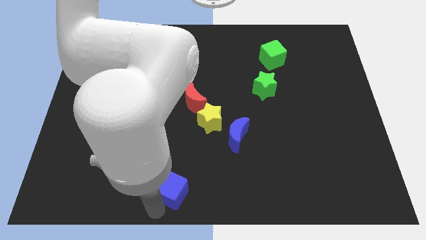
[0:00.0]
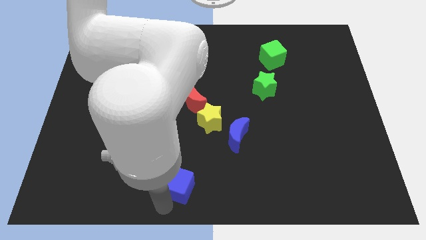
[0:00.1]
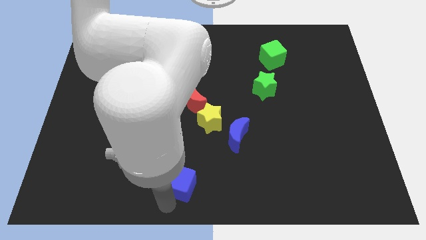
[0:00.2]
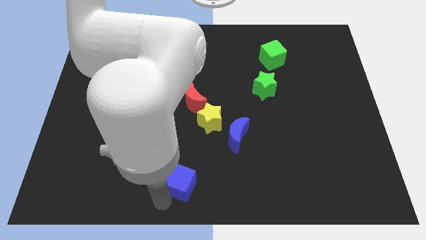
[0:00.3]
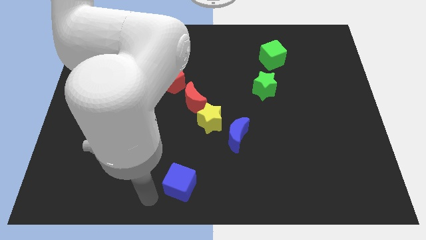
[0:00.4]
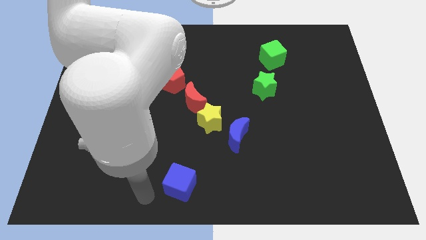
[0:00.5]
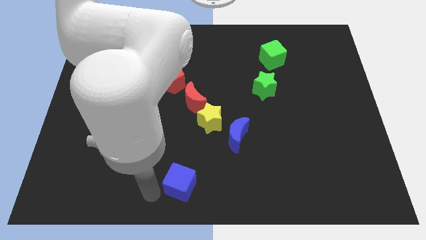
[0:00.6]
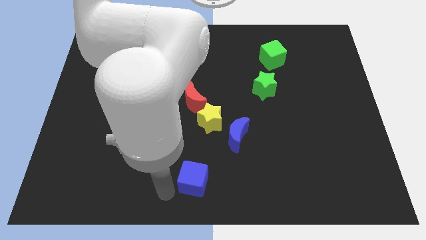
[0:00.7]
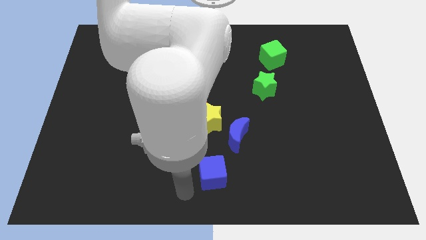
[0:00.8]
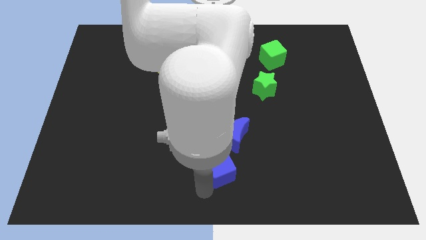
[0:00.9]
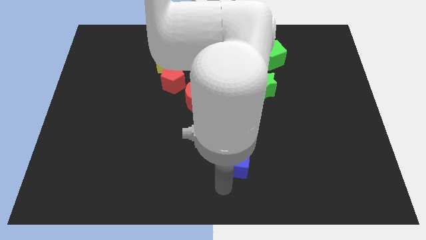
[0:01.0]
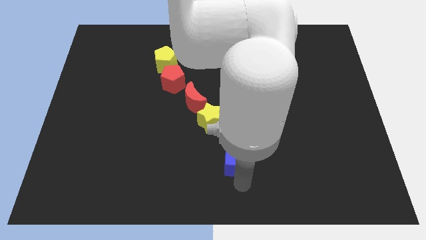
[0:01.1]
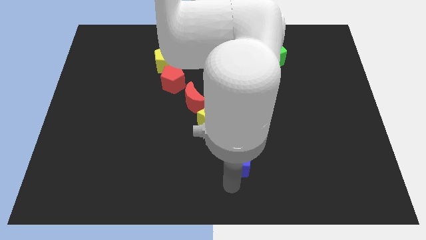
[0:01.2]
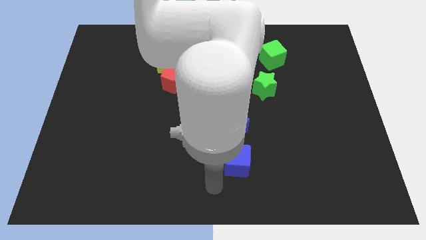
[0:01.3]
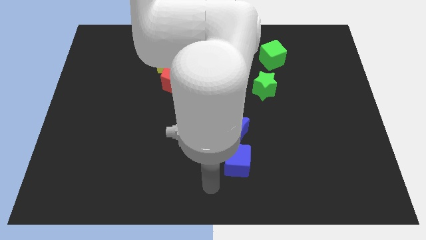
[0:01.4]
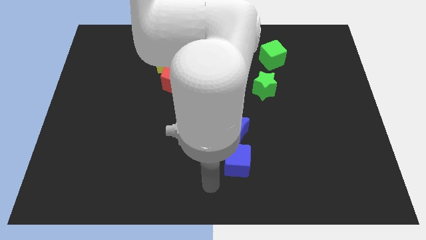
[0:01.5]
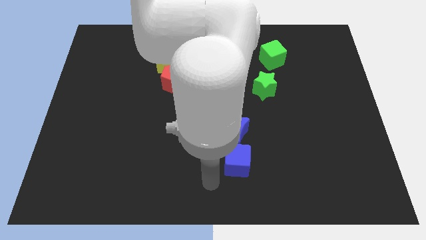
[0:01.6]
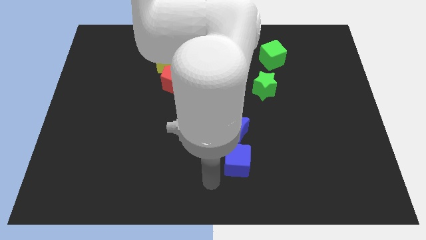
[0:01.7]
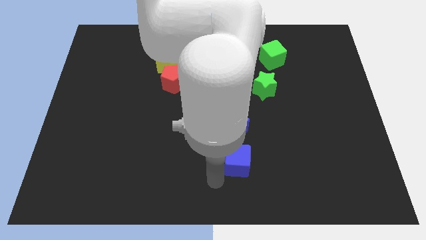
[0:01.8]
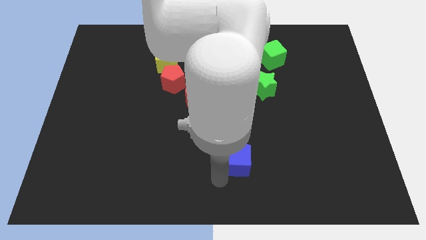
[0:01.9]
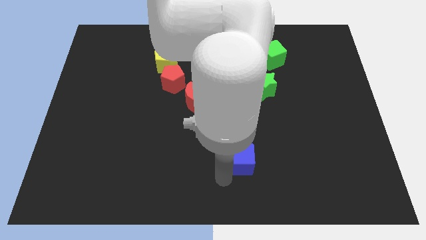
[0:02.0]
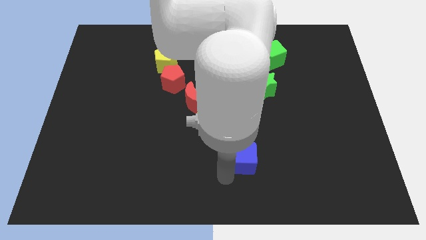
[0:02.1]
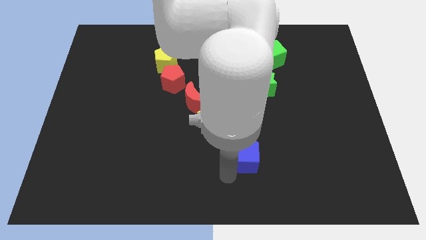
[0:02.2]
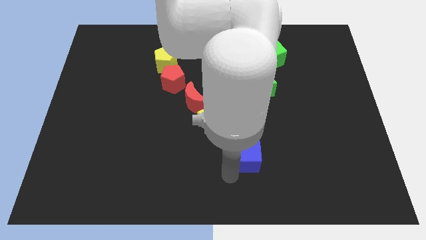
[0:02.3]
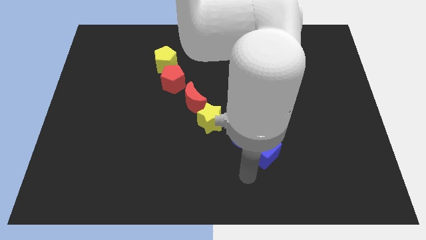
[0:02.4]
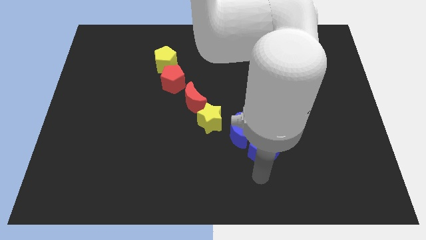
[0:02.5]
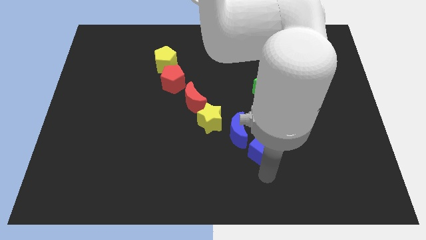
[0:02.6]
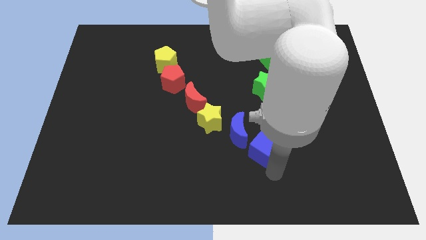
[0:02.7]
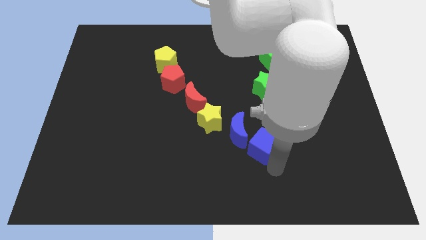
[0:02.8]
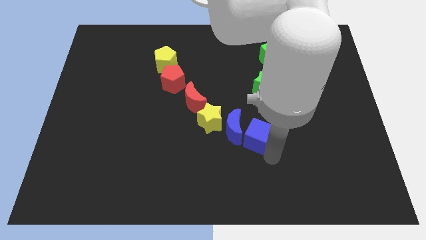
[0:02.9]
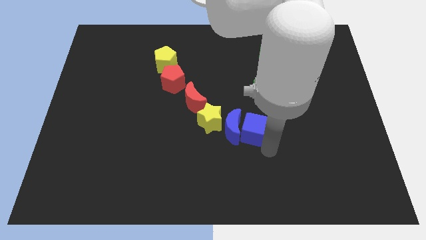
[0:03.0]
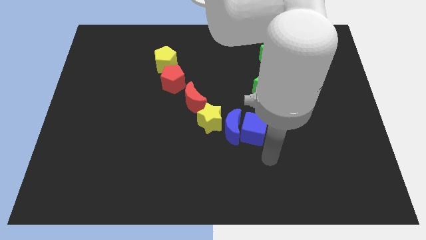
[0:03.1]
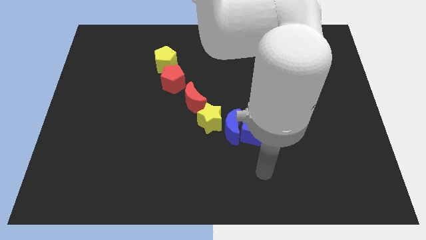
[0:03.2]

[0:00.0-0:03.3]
slide the blue cube to the right of the blue moon

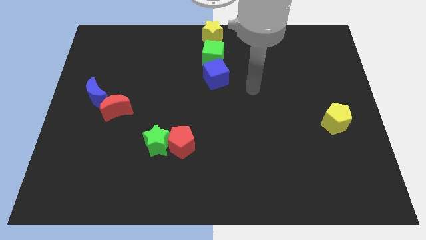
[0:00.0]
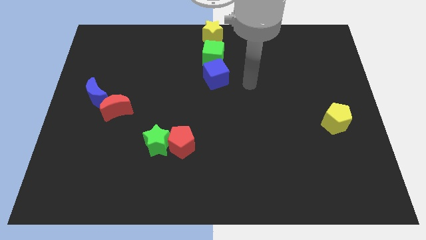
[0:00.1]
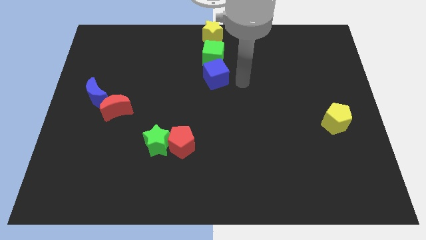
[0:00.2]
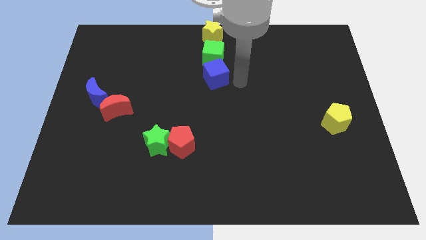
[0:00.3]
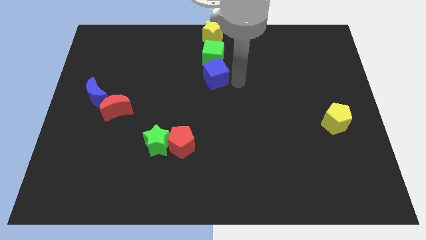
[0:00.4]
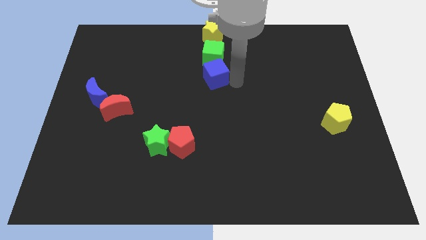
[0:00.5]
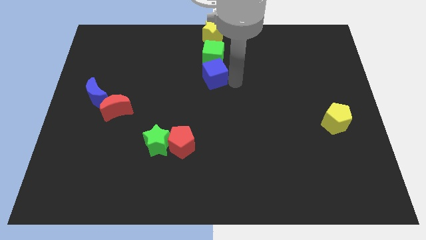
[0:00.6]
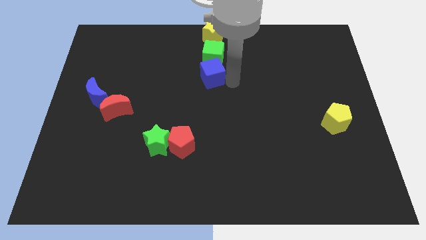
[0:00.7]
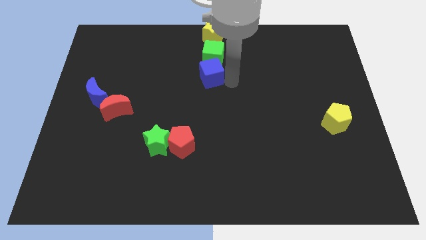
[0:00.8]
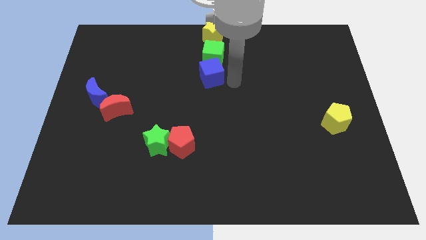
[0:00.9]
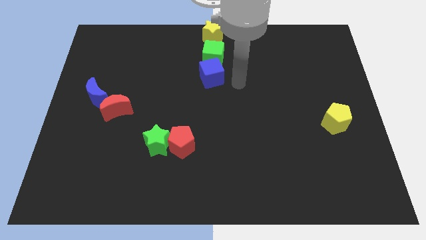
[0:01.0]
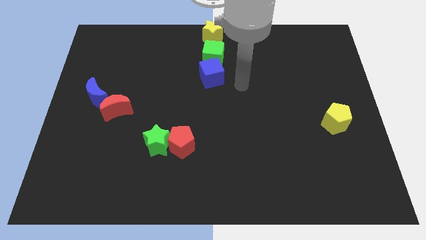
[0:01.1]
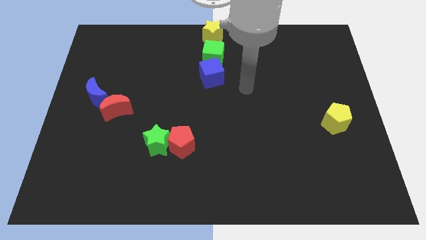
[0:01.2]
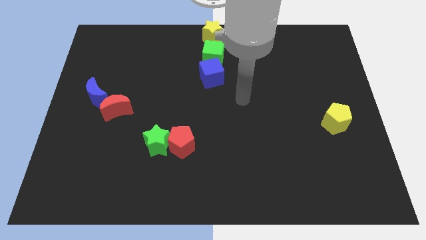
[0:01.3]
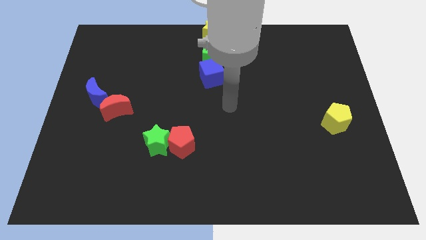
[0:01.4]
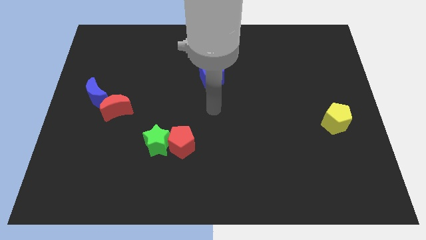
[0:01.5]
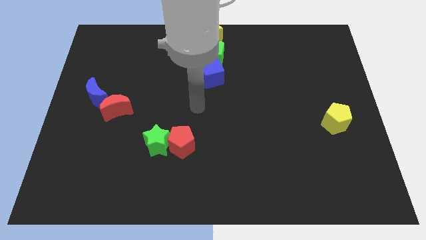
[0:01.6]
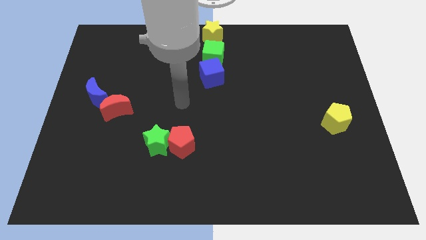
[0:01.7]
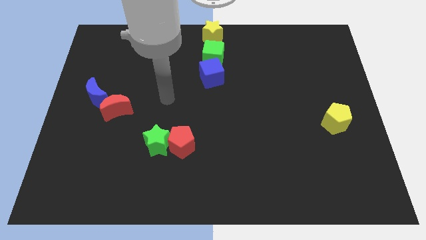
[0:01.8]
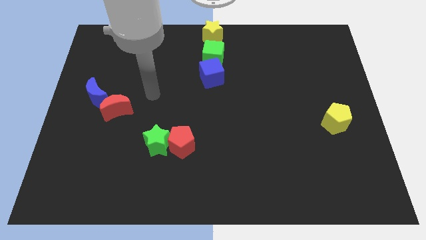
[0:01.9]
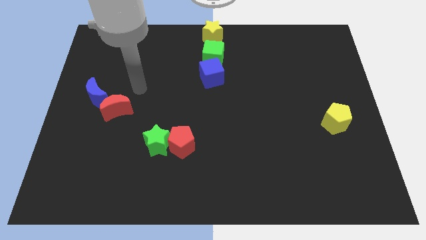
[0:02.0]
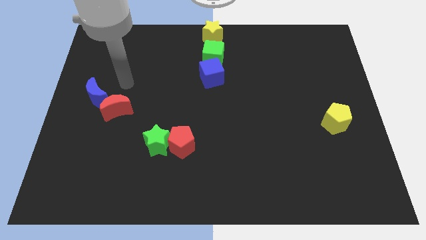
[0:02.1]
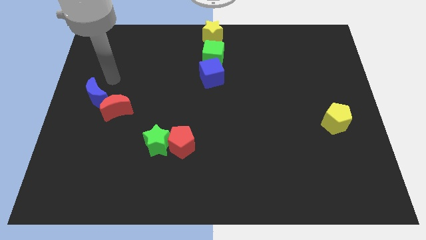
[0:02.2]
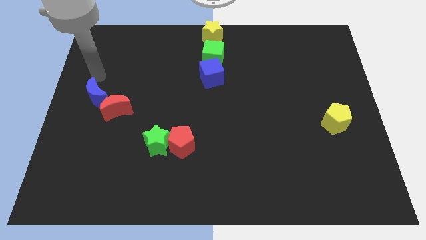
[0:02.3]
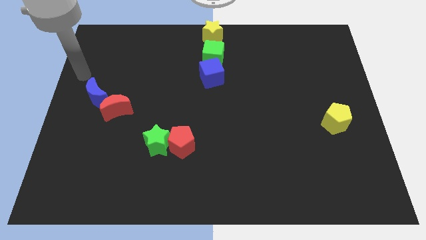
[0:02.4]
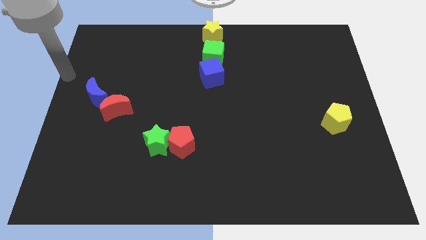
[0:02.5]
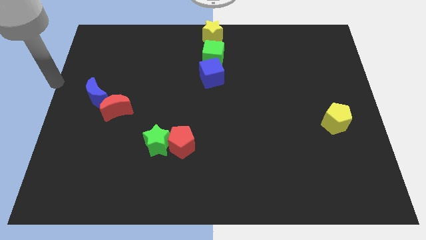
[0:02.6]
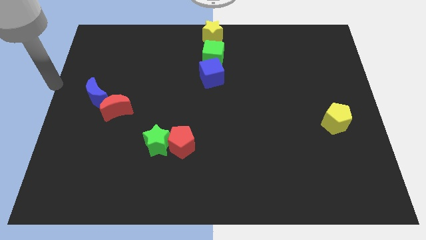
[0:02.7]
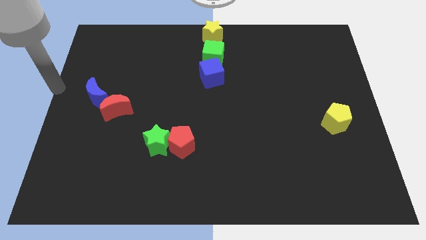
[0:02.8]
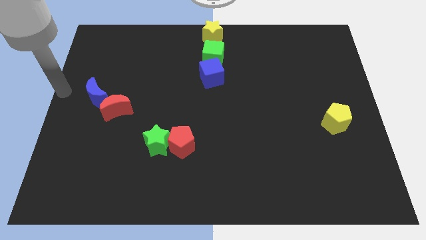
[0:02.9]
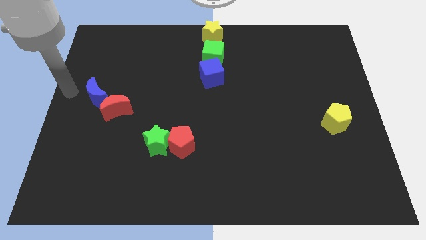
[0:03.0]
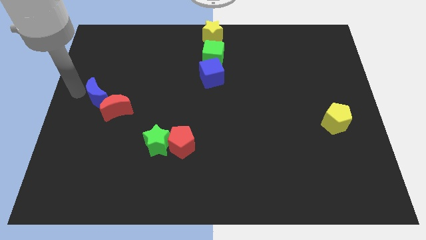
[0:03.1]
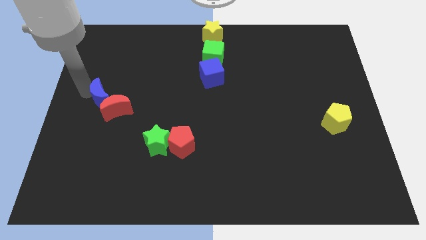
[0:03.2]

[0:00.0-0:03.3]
place your arm left to blue moon

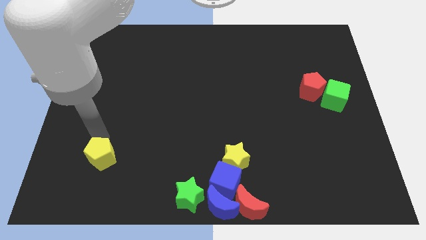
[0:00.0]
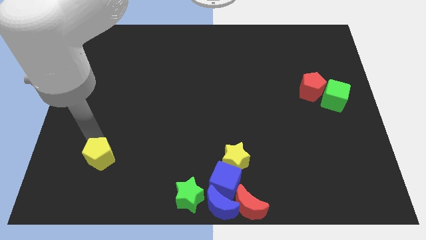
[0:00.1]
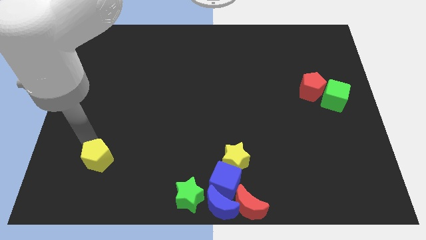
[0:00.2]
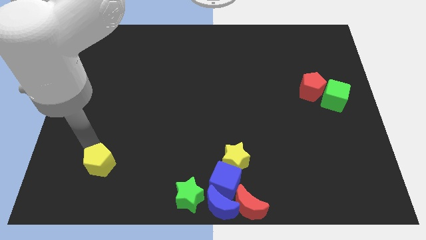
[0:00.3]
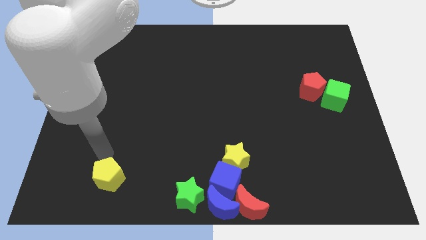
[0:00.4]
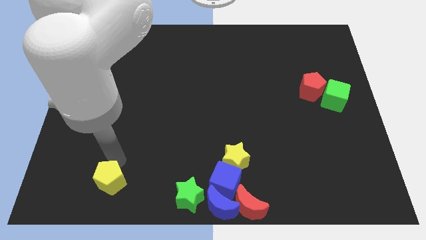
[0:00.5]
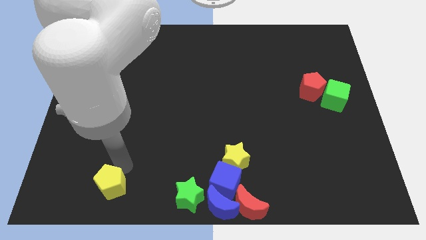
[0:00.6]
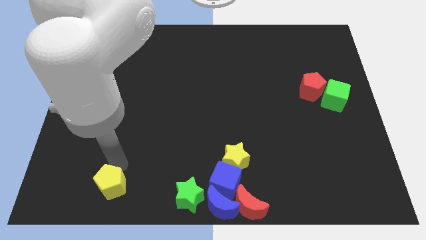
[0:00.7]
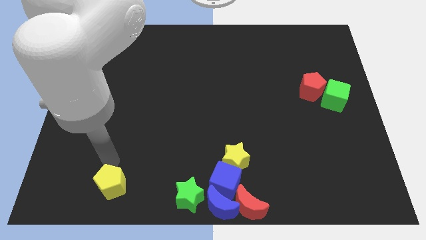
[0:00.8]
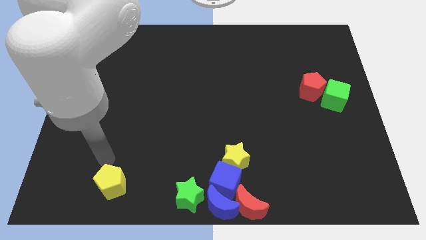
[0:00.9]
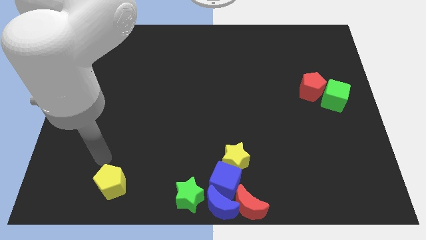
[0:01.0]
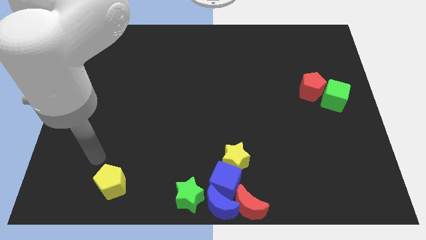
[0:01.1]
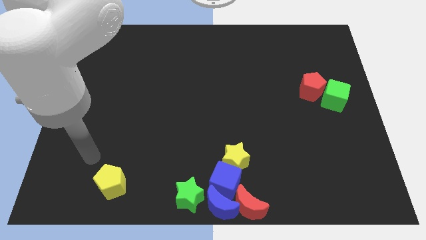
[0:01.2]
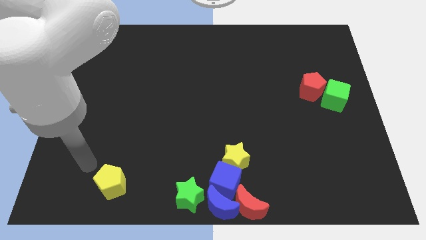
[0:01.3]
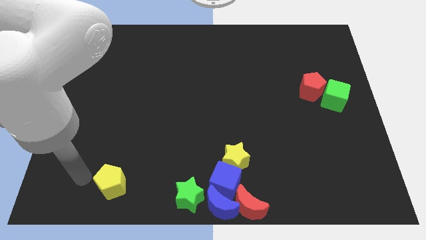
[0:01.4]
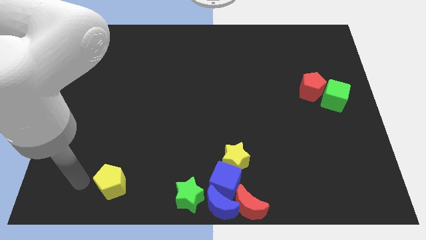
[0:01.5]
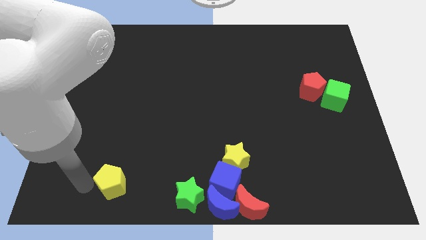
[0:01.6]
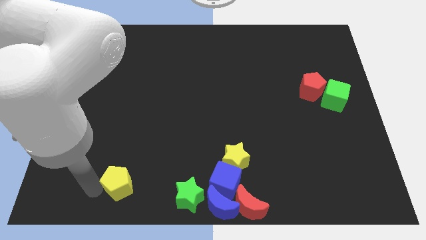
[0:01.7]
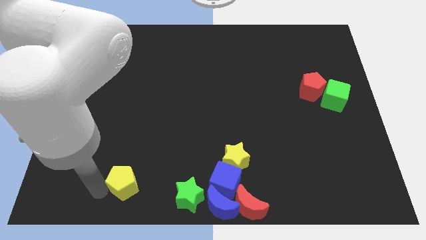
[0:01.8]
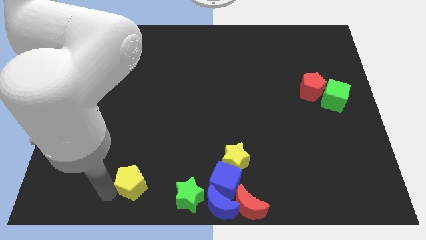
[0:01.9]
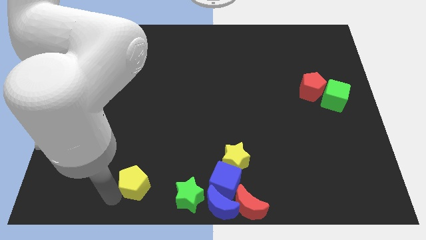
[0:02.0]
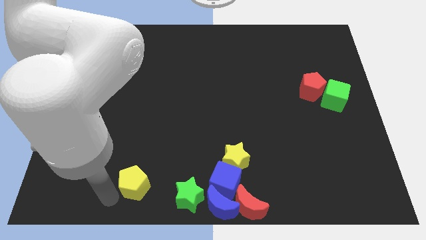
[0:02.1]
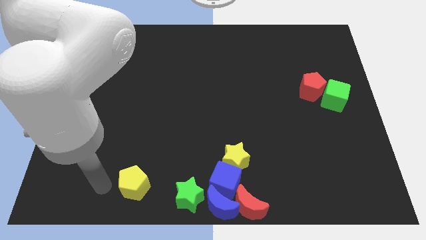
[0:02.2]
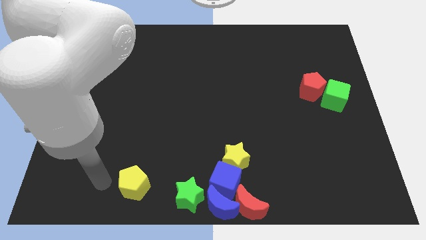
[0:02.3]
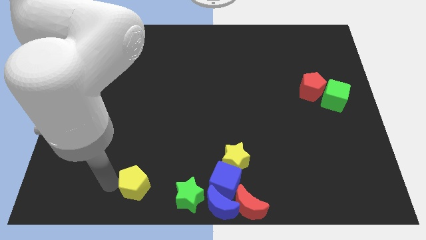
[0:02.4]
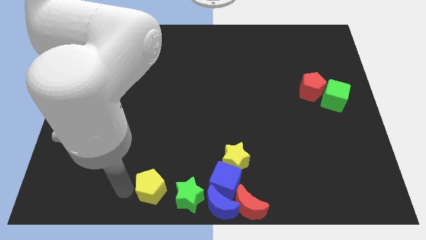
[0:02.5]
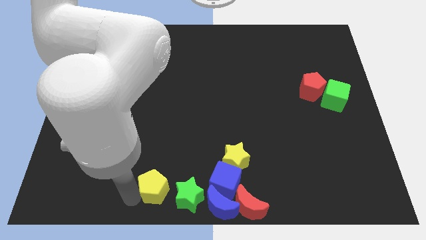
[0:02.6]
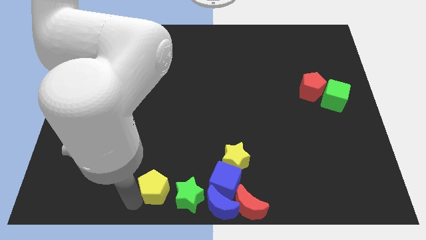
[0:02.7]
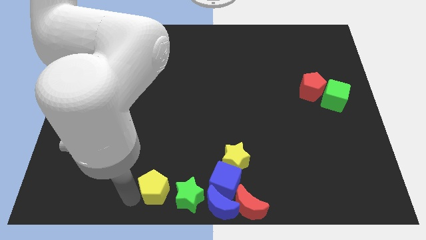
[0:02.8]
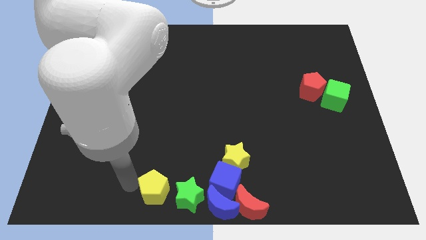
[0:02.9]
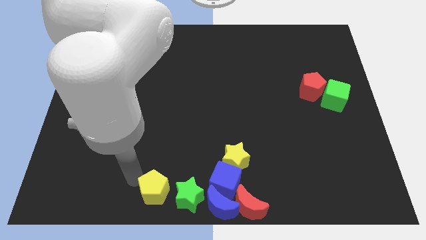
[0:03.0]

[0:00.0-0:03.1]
move the yellow pentagon close to the green star
